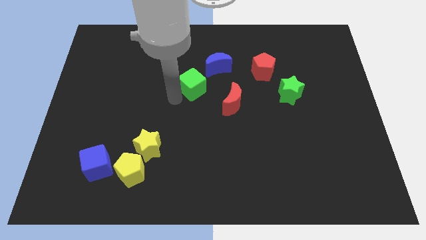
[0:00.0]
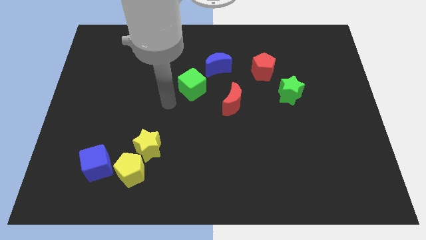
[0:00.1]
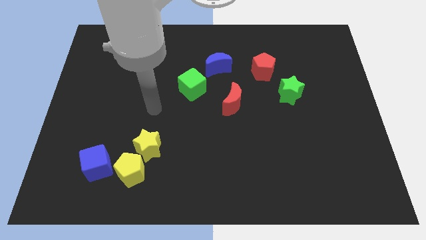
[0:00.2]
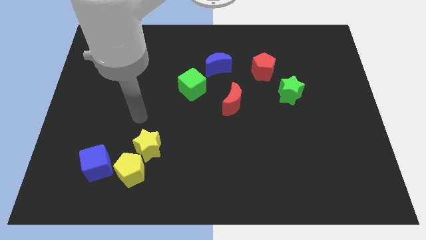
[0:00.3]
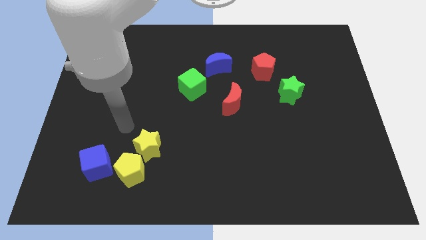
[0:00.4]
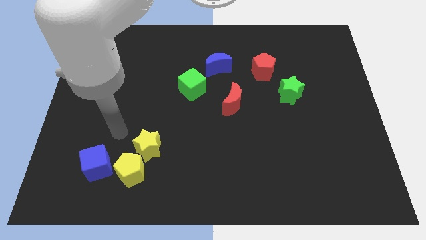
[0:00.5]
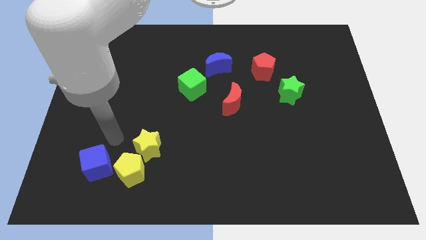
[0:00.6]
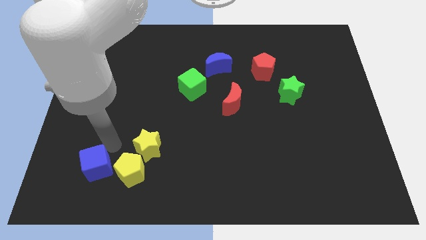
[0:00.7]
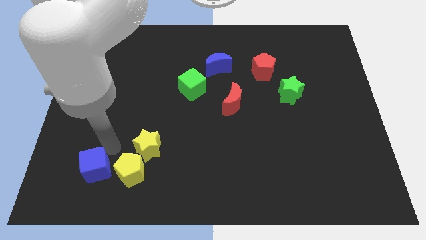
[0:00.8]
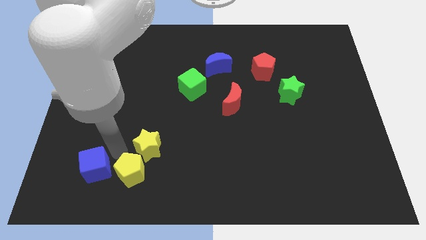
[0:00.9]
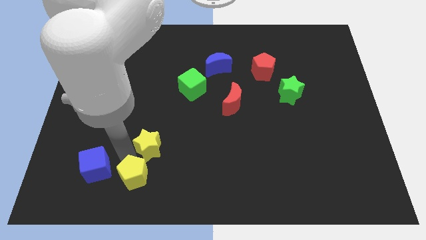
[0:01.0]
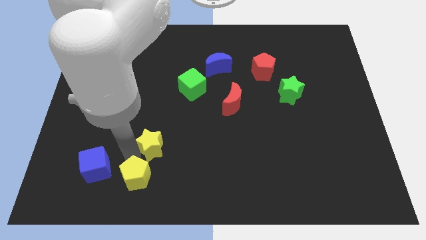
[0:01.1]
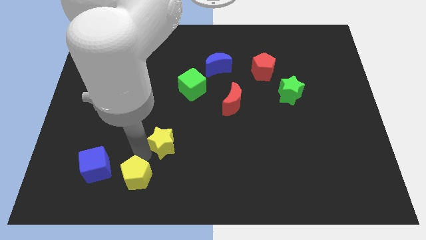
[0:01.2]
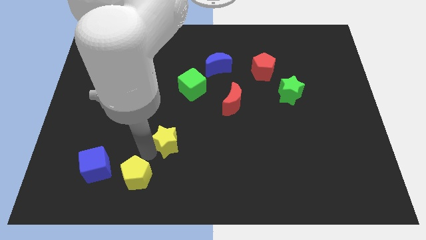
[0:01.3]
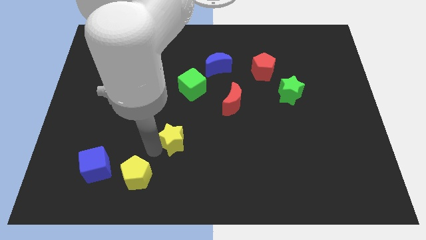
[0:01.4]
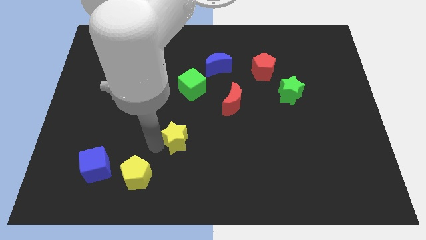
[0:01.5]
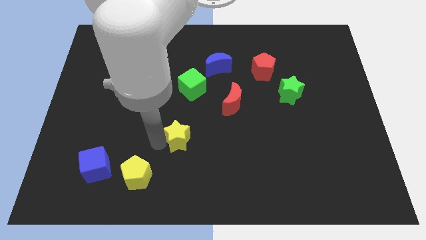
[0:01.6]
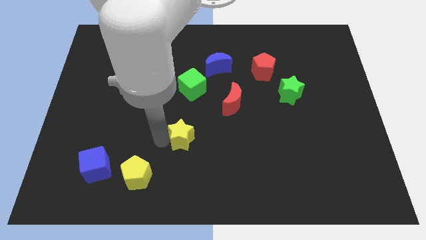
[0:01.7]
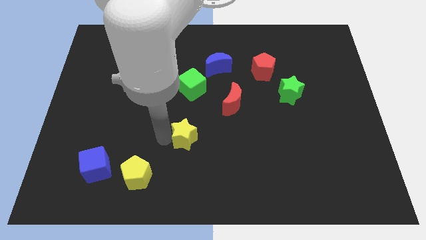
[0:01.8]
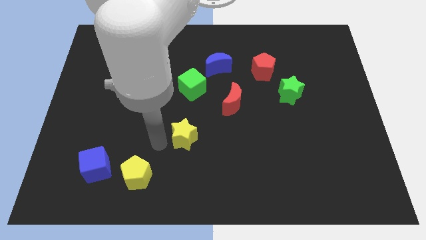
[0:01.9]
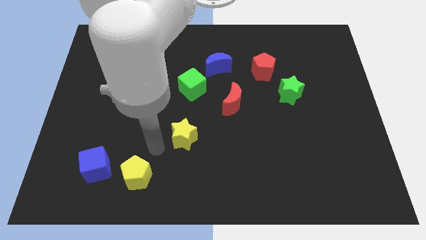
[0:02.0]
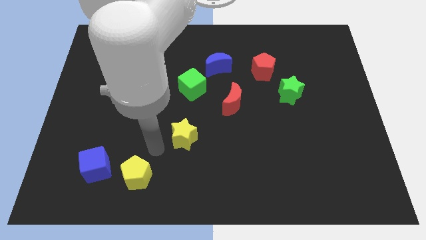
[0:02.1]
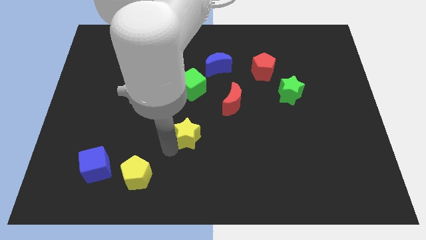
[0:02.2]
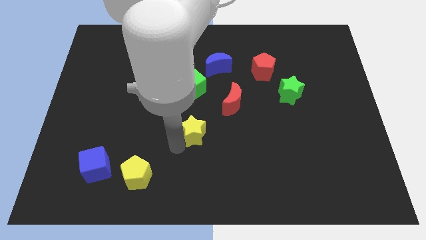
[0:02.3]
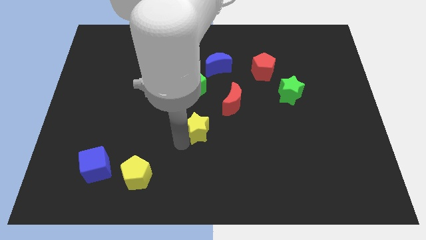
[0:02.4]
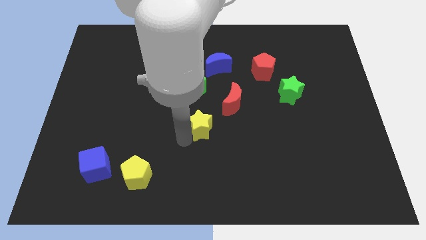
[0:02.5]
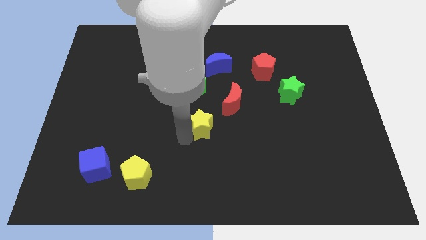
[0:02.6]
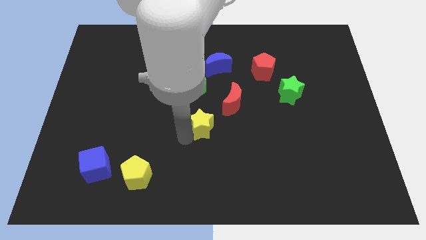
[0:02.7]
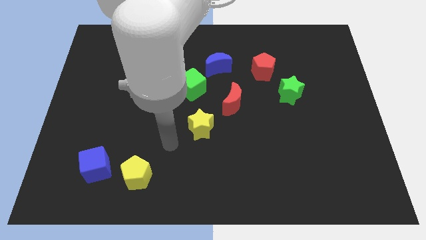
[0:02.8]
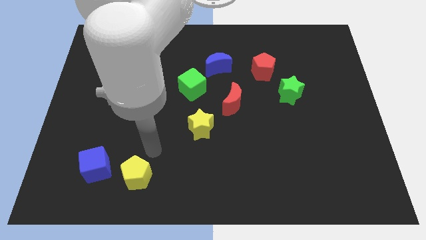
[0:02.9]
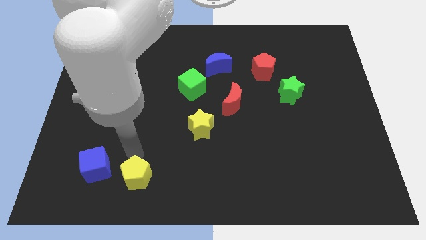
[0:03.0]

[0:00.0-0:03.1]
place yellow star to the bottom left of red moon

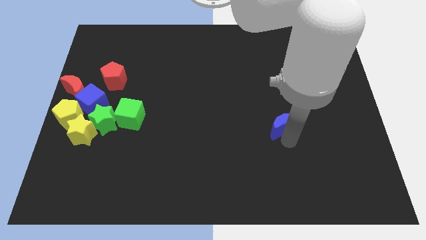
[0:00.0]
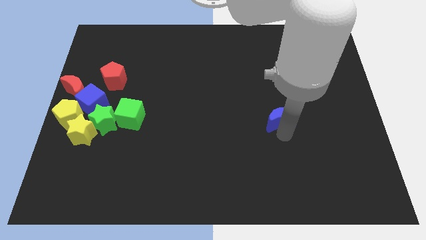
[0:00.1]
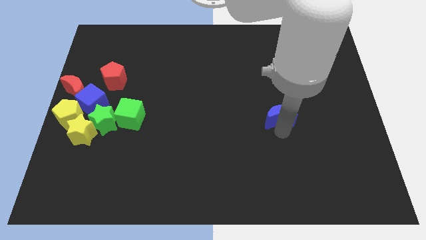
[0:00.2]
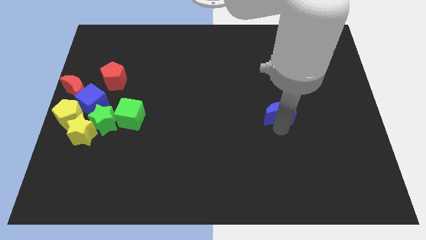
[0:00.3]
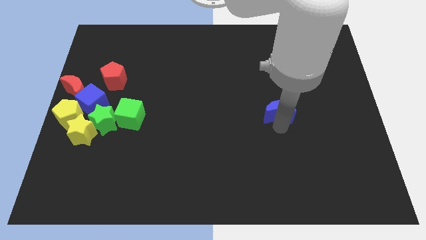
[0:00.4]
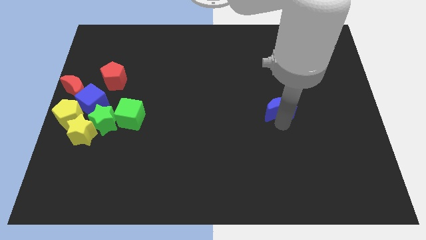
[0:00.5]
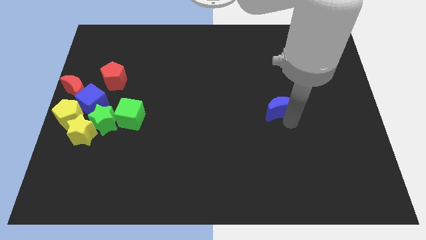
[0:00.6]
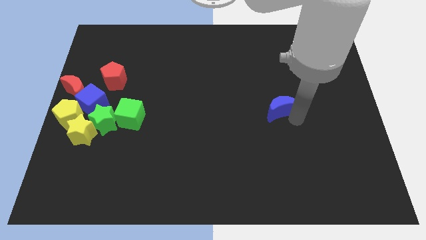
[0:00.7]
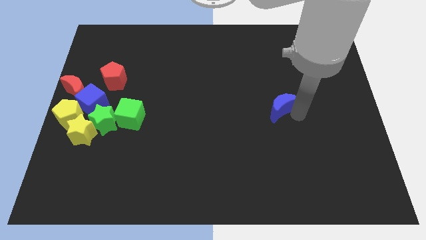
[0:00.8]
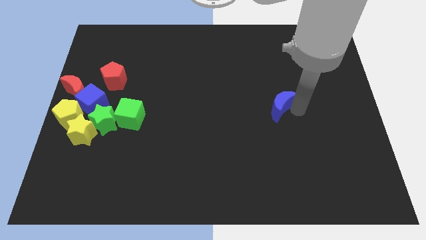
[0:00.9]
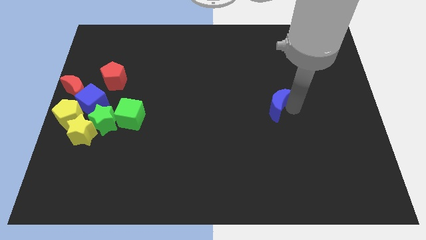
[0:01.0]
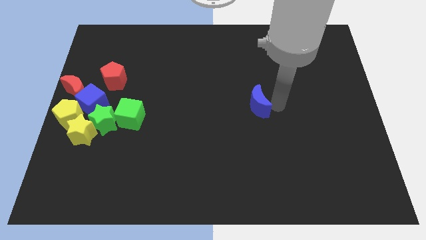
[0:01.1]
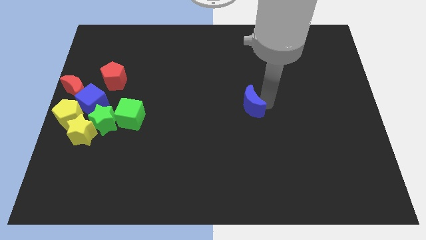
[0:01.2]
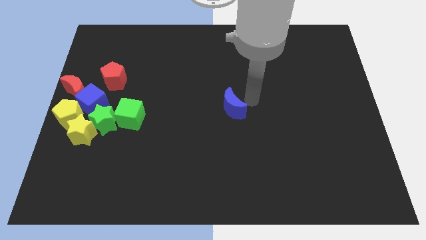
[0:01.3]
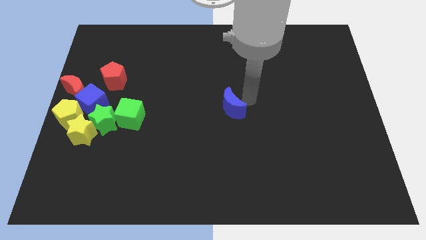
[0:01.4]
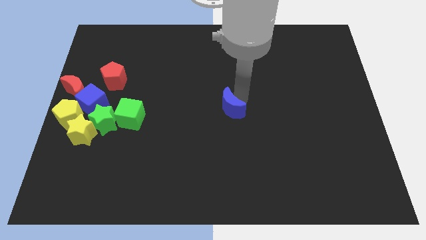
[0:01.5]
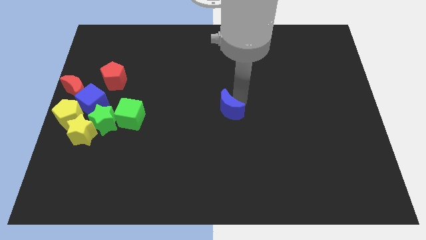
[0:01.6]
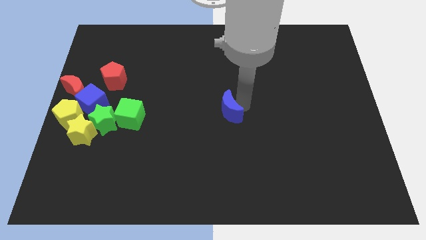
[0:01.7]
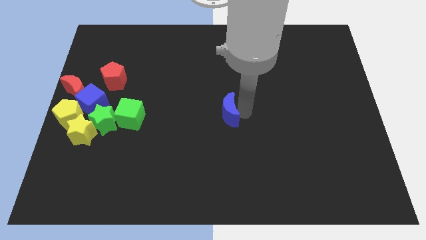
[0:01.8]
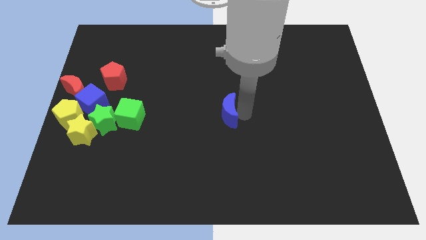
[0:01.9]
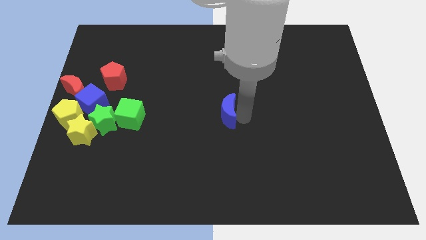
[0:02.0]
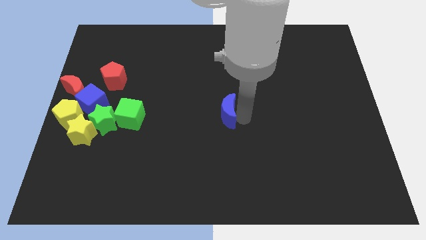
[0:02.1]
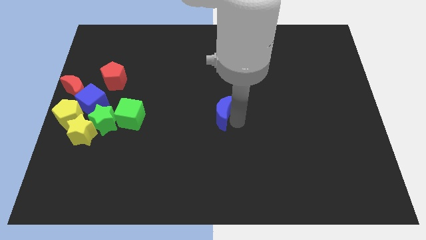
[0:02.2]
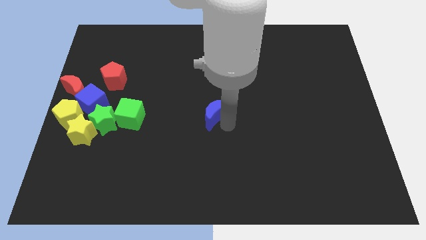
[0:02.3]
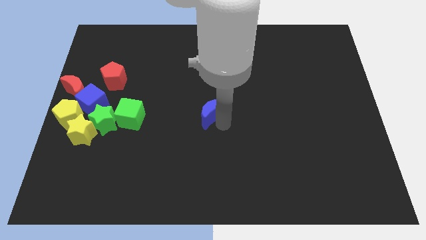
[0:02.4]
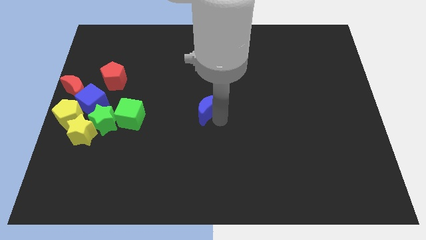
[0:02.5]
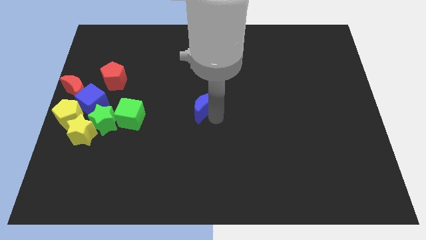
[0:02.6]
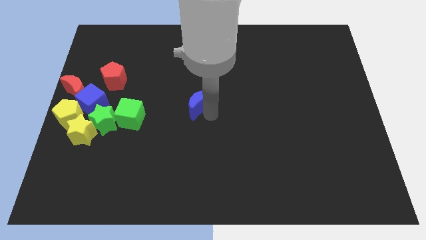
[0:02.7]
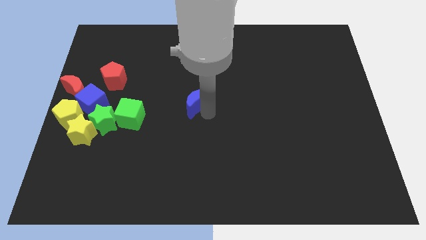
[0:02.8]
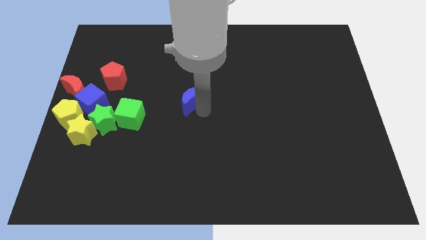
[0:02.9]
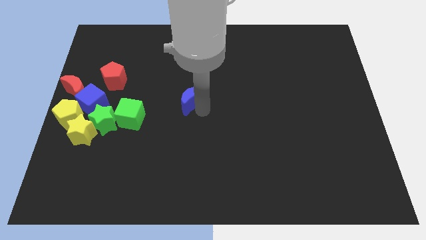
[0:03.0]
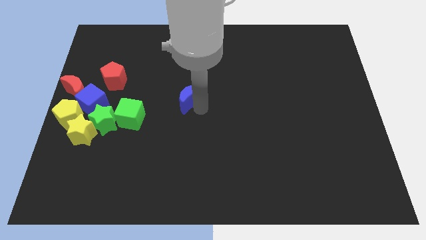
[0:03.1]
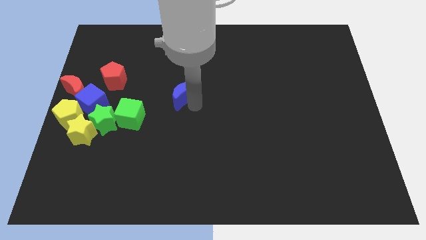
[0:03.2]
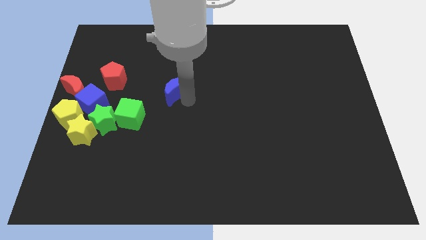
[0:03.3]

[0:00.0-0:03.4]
drag the blue moon towards the right side of the group of blocks

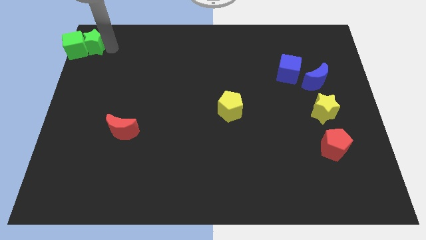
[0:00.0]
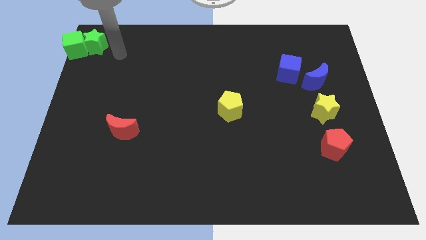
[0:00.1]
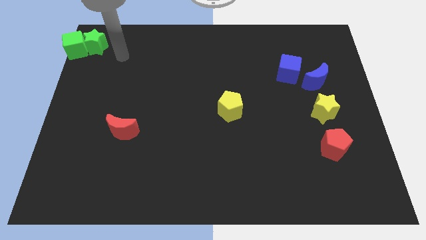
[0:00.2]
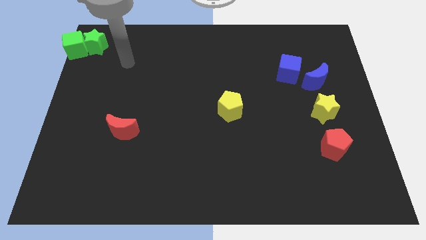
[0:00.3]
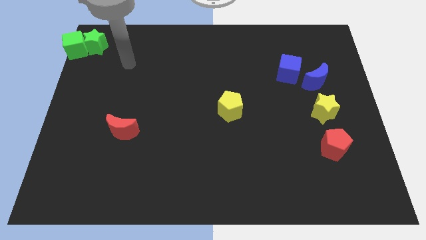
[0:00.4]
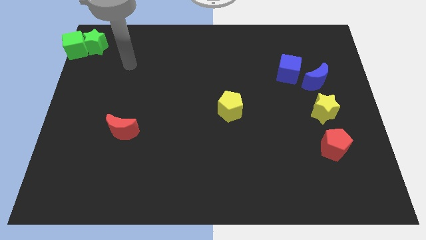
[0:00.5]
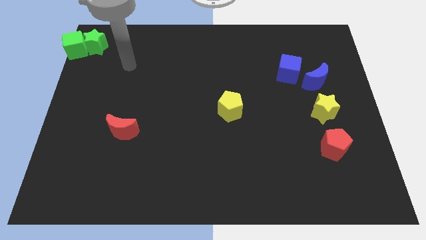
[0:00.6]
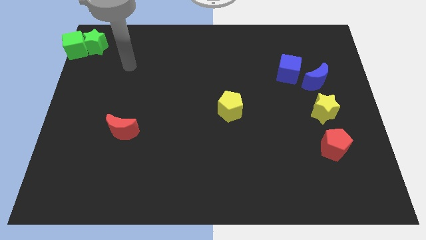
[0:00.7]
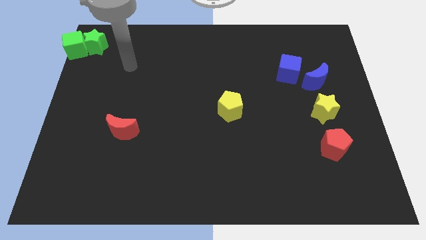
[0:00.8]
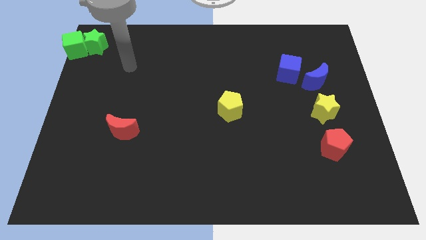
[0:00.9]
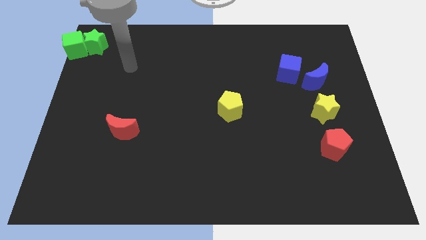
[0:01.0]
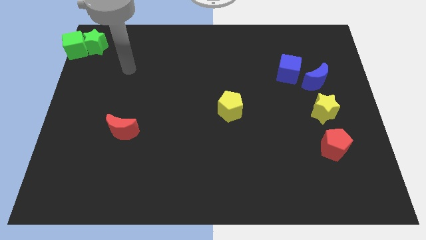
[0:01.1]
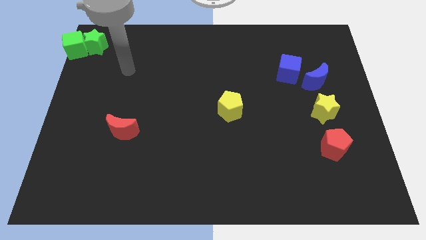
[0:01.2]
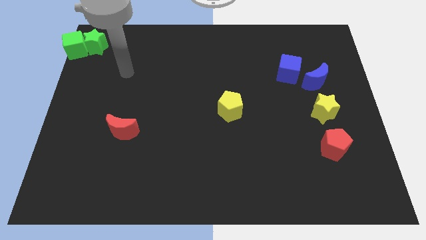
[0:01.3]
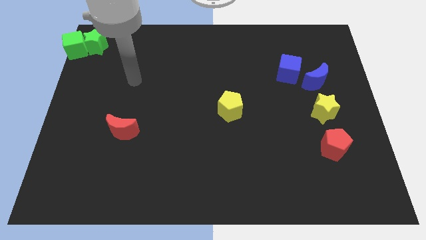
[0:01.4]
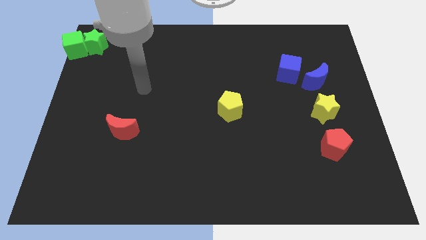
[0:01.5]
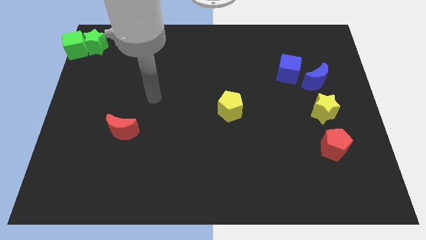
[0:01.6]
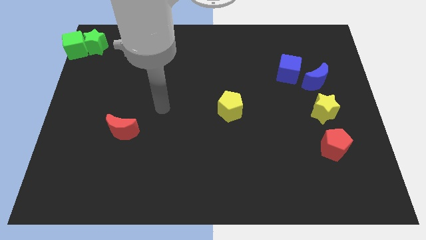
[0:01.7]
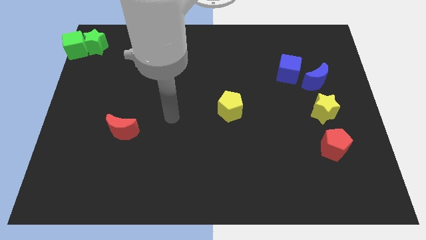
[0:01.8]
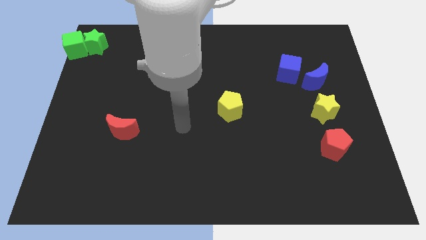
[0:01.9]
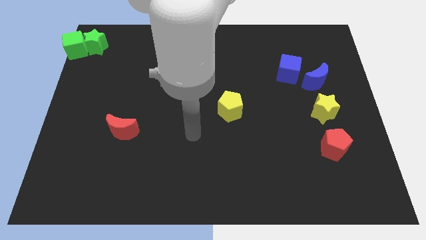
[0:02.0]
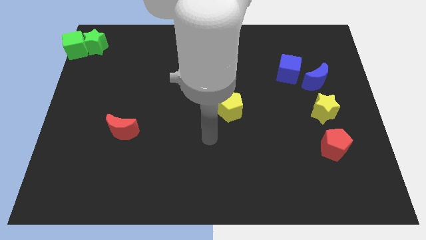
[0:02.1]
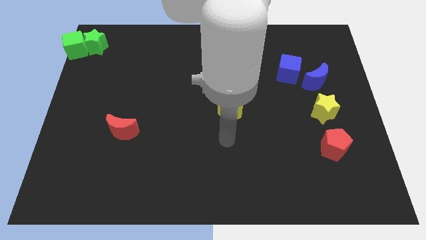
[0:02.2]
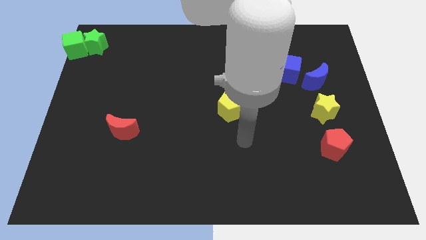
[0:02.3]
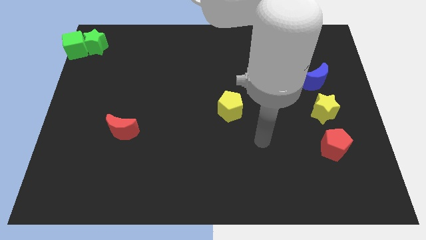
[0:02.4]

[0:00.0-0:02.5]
move your arm away from the green star
